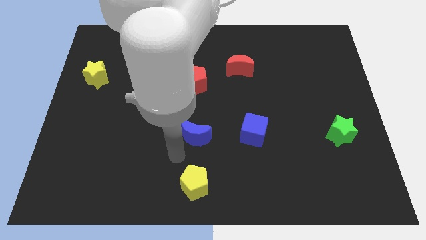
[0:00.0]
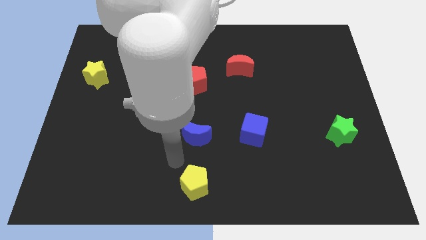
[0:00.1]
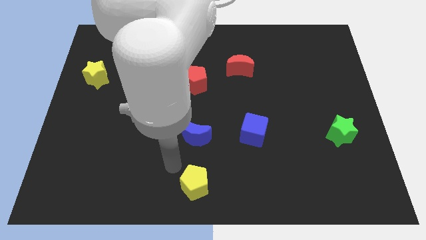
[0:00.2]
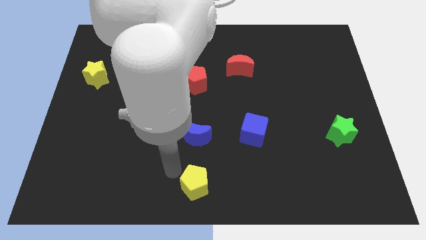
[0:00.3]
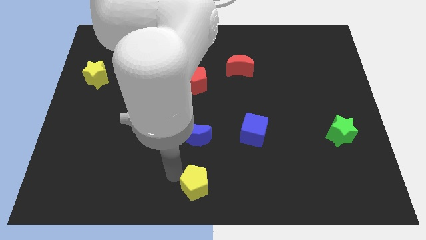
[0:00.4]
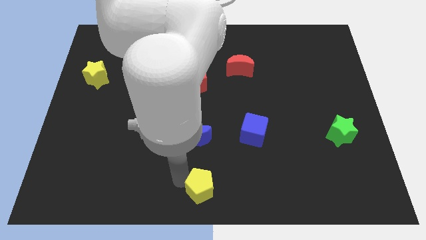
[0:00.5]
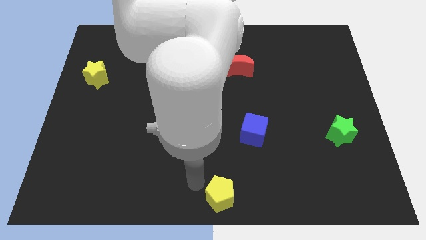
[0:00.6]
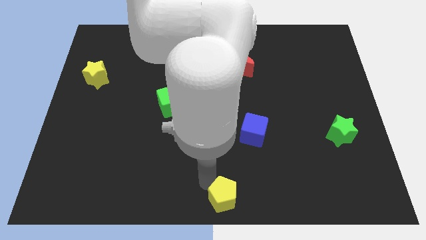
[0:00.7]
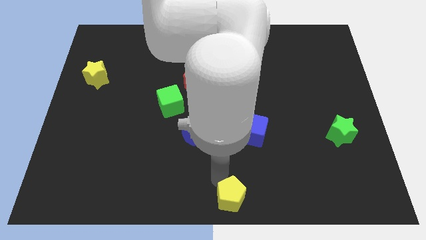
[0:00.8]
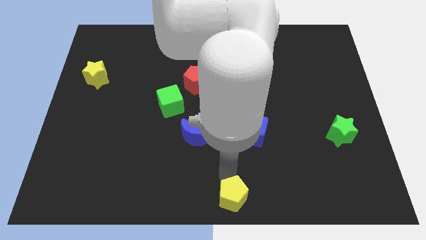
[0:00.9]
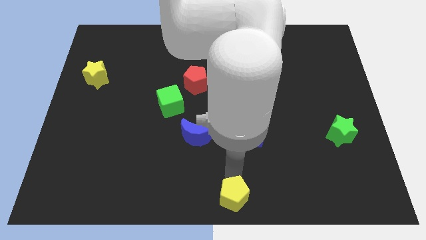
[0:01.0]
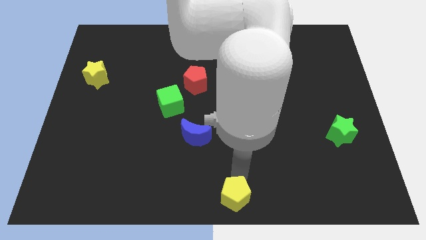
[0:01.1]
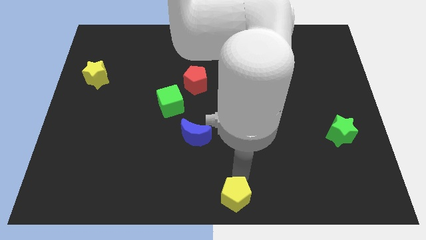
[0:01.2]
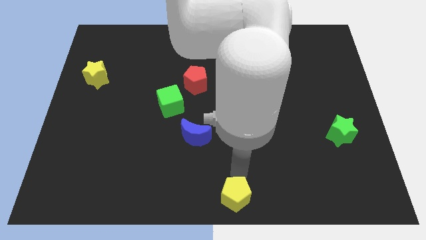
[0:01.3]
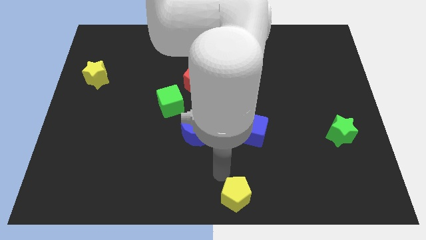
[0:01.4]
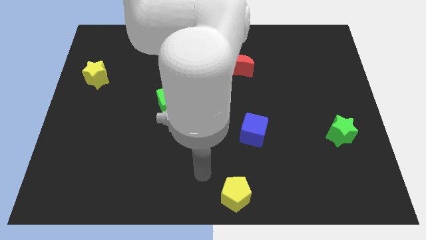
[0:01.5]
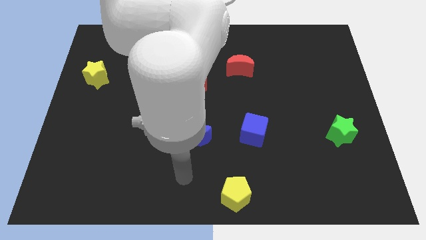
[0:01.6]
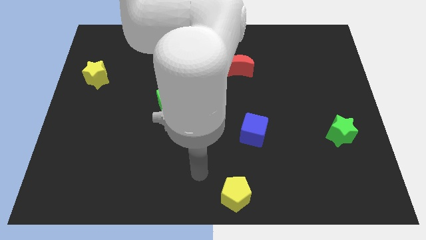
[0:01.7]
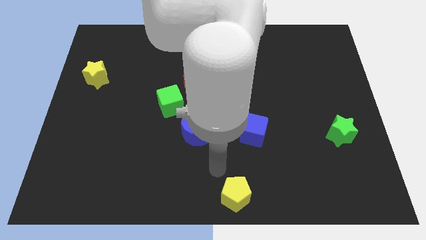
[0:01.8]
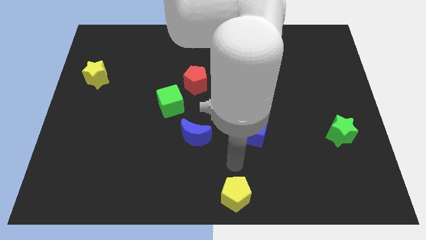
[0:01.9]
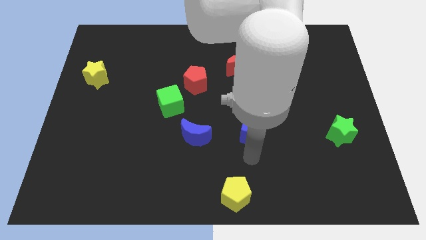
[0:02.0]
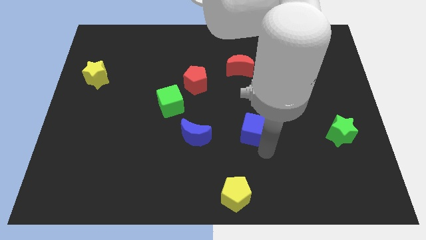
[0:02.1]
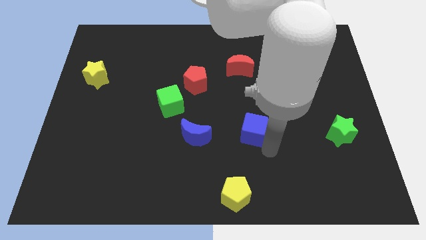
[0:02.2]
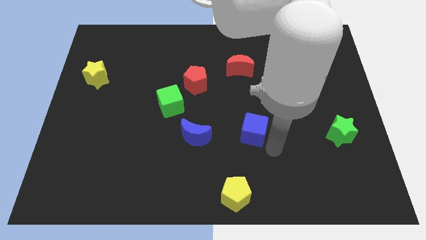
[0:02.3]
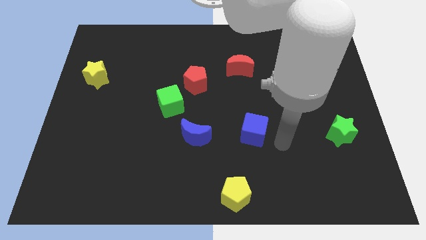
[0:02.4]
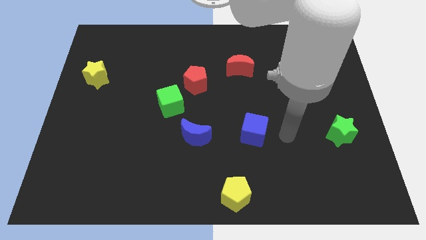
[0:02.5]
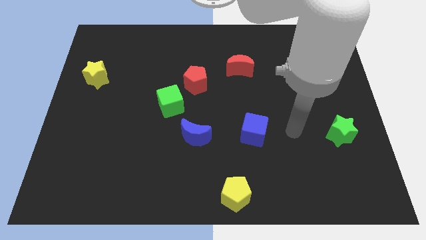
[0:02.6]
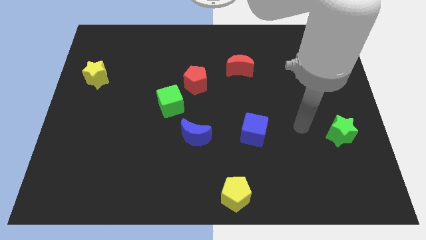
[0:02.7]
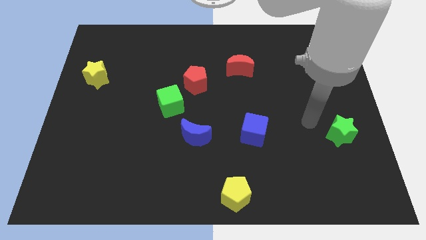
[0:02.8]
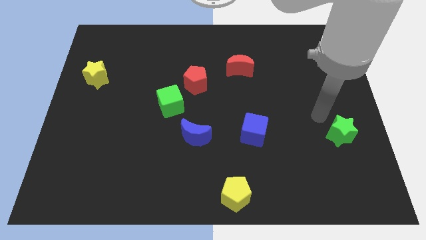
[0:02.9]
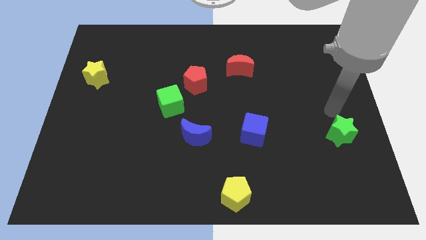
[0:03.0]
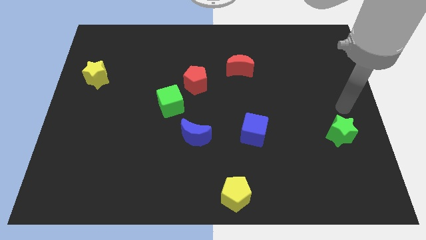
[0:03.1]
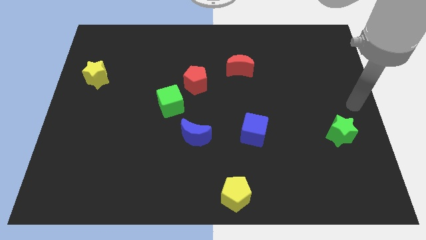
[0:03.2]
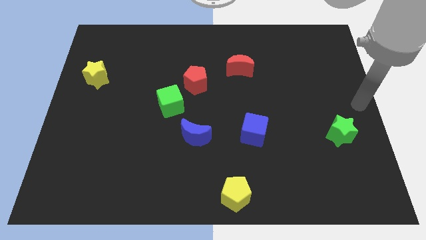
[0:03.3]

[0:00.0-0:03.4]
place the yellow pentagon at the bottom center of the board

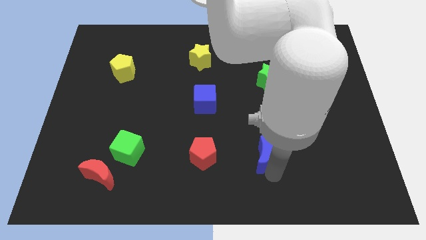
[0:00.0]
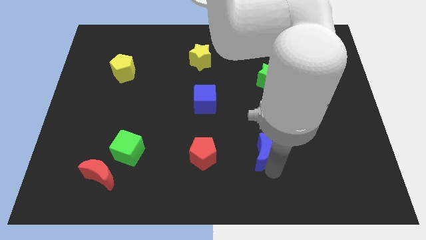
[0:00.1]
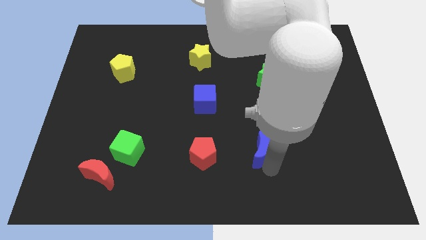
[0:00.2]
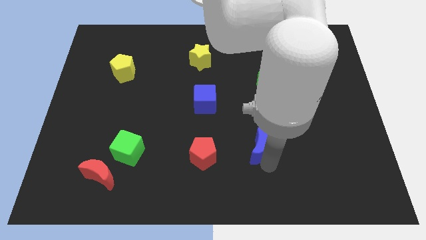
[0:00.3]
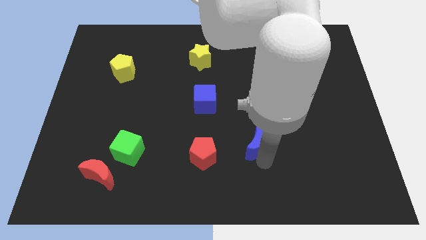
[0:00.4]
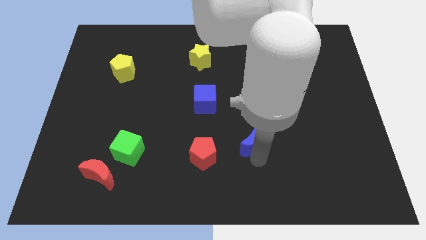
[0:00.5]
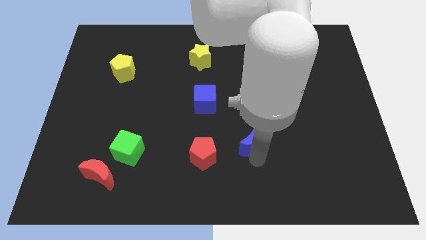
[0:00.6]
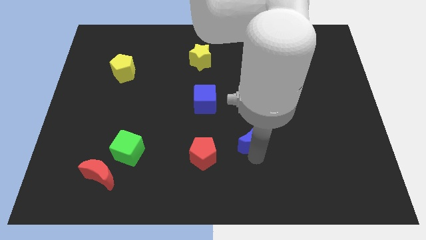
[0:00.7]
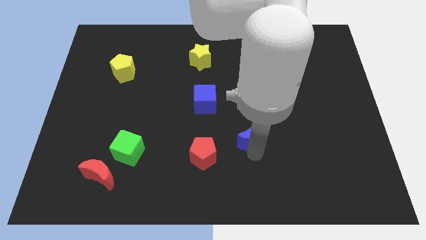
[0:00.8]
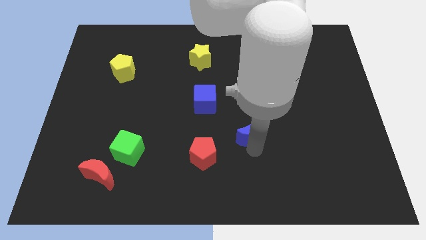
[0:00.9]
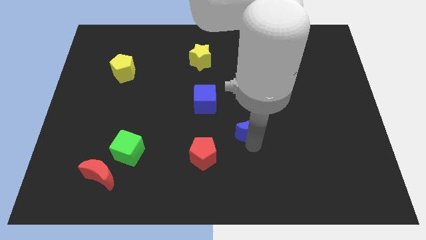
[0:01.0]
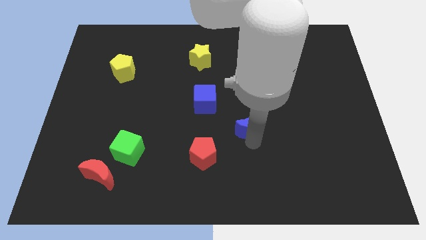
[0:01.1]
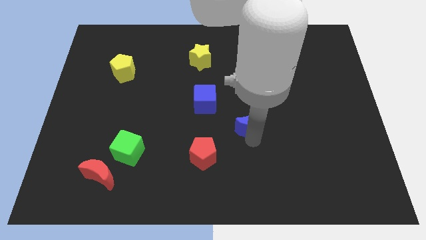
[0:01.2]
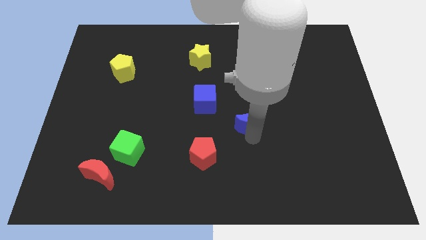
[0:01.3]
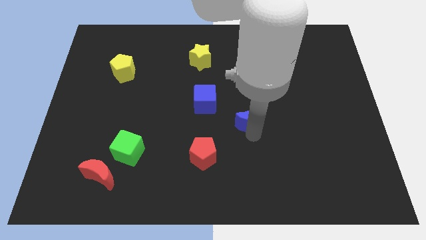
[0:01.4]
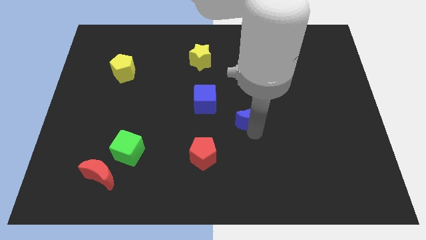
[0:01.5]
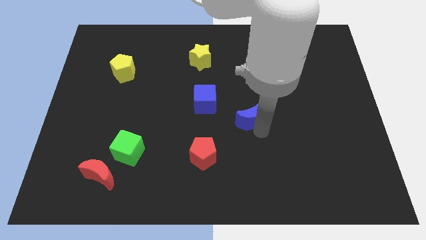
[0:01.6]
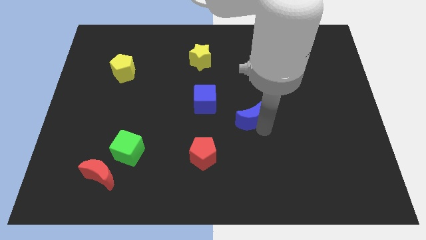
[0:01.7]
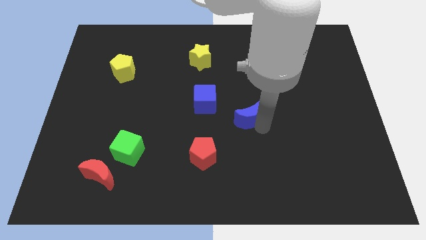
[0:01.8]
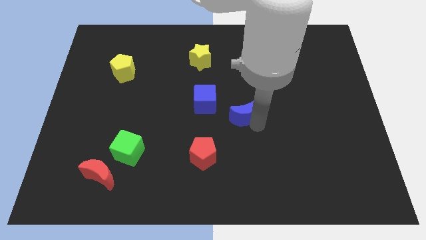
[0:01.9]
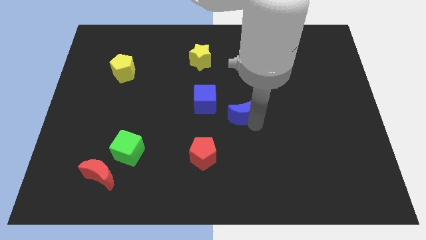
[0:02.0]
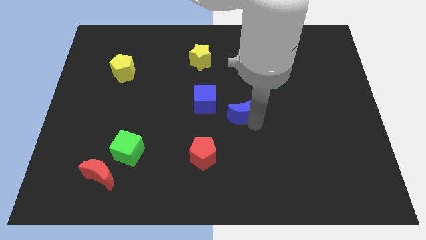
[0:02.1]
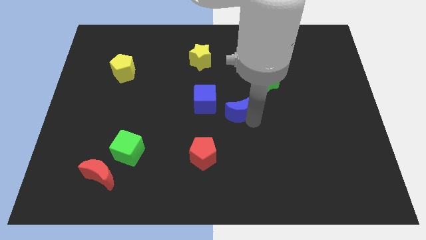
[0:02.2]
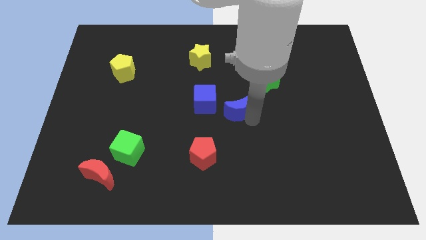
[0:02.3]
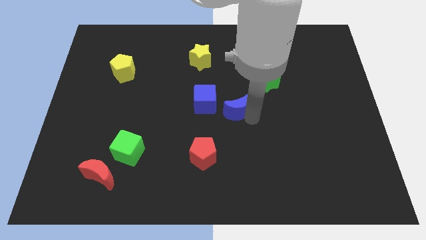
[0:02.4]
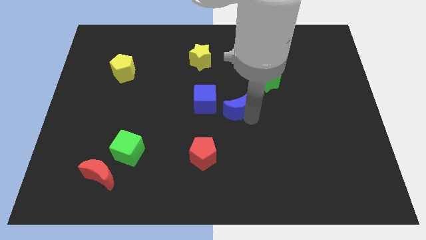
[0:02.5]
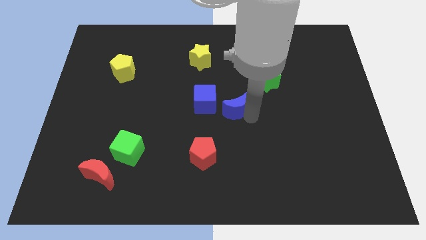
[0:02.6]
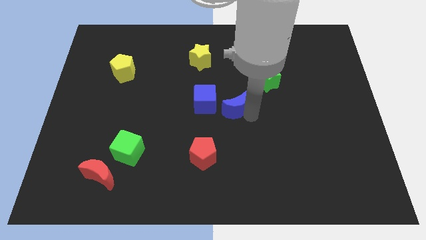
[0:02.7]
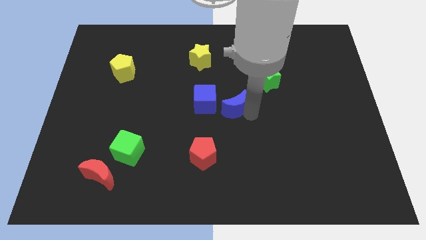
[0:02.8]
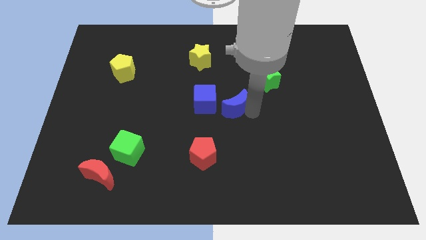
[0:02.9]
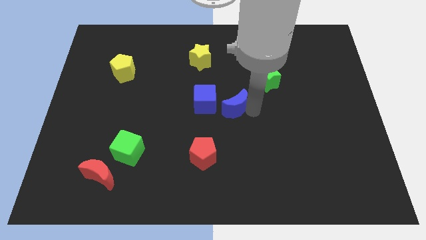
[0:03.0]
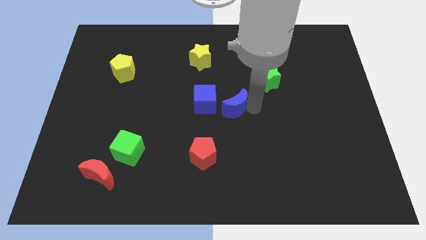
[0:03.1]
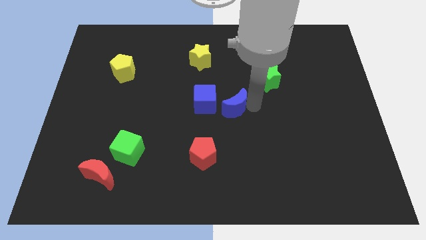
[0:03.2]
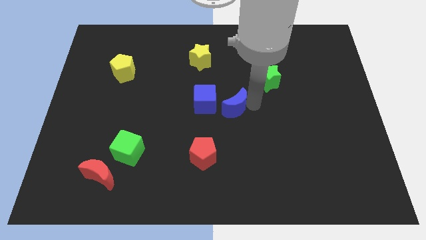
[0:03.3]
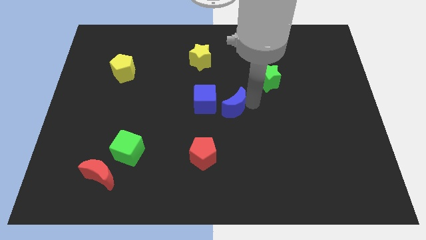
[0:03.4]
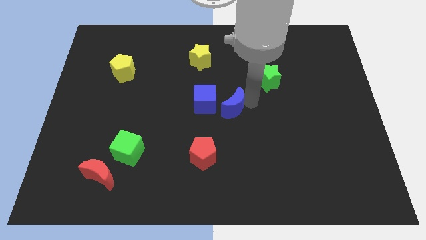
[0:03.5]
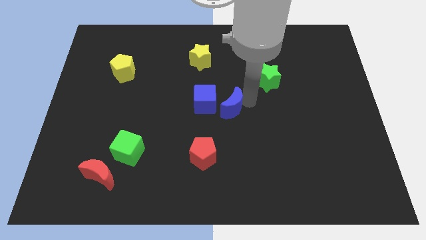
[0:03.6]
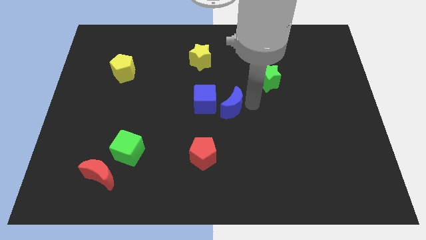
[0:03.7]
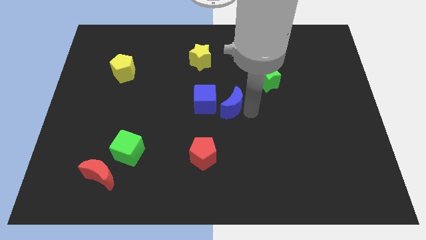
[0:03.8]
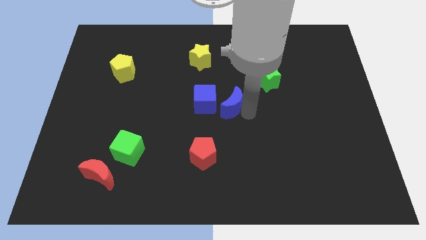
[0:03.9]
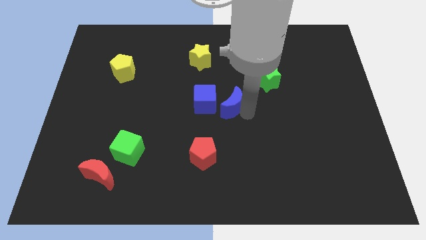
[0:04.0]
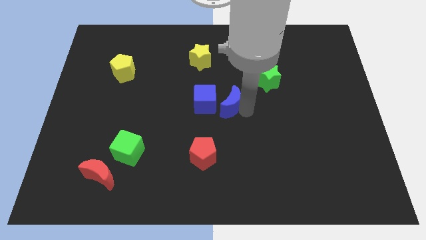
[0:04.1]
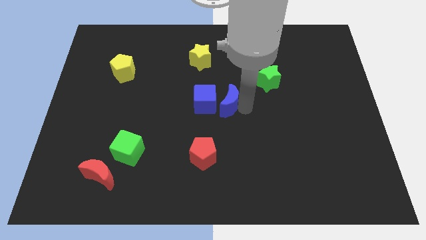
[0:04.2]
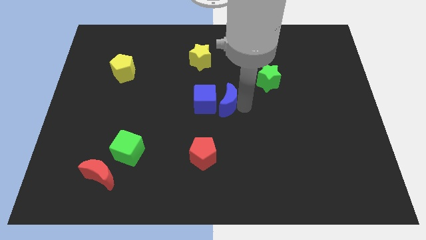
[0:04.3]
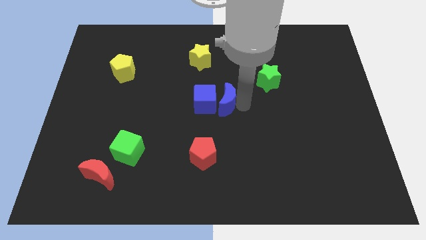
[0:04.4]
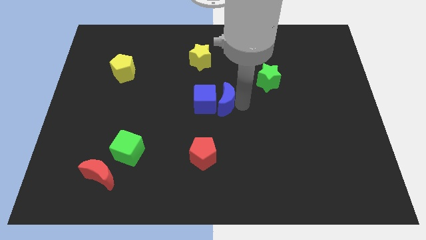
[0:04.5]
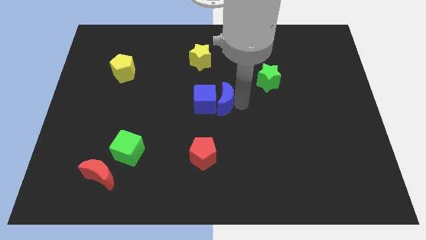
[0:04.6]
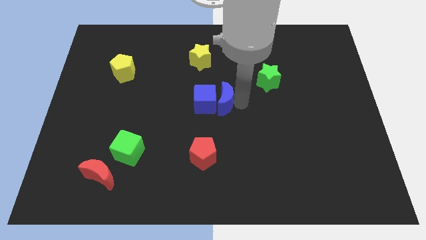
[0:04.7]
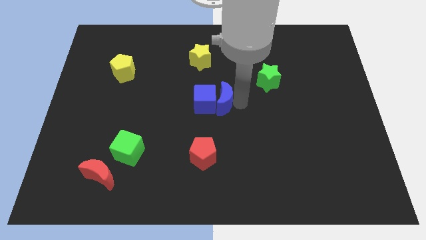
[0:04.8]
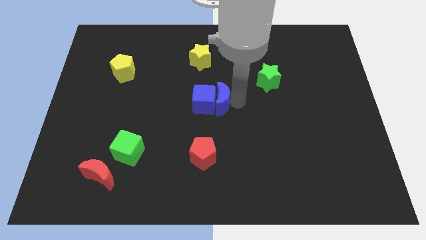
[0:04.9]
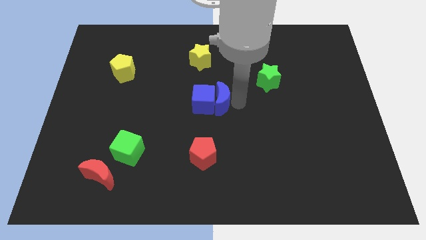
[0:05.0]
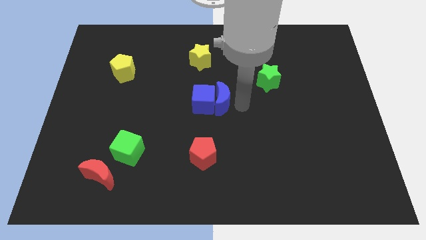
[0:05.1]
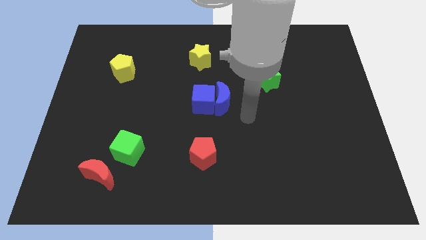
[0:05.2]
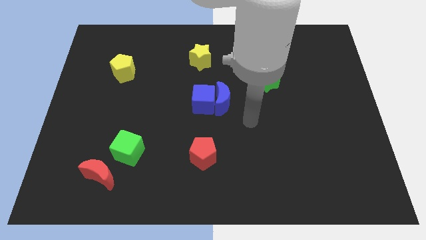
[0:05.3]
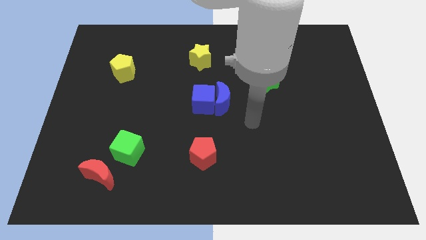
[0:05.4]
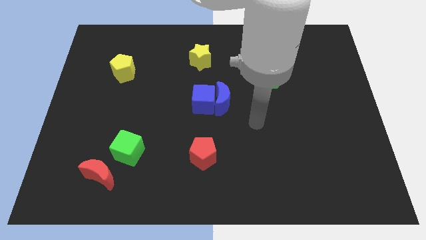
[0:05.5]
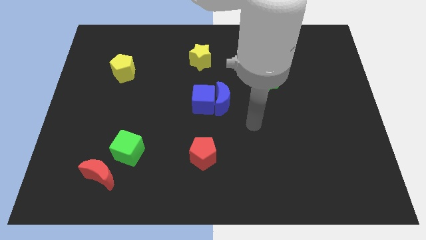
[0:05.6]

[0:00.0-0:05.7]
push the blue moon to the right side of the blue cube
